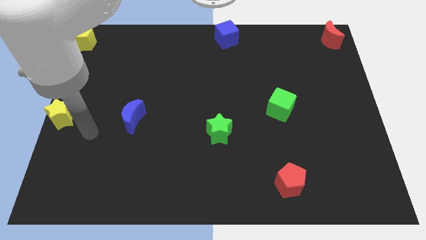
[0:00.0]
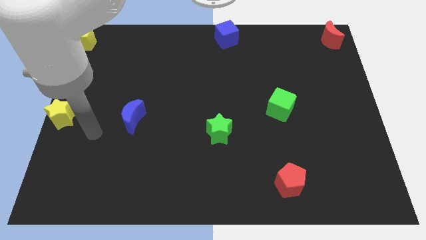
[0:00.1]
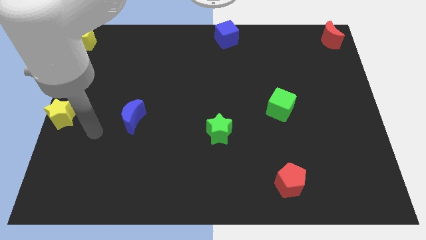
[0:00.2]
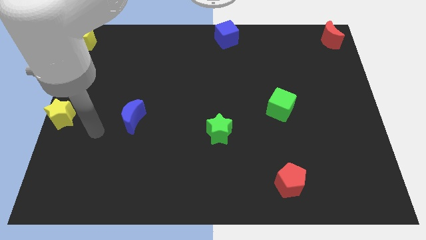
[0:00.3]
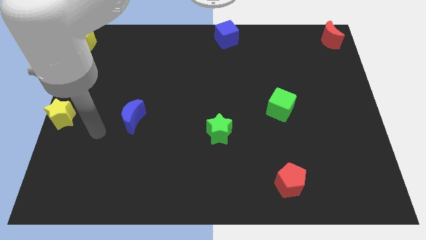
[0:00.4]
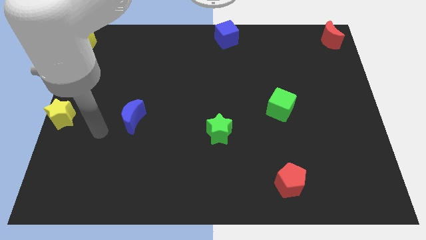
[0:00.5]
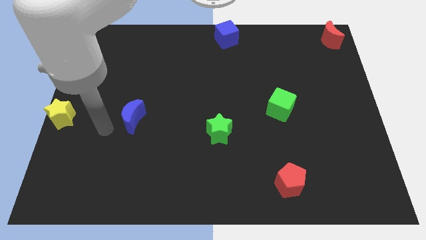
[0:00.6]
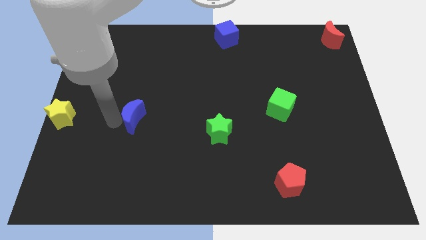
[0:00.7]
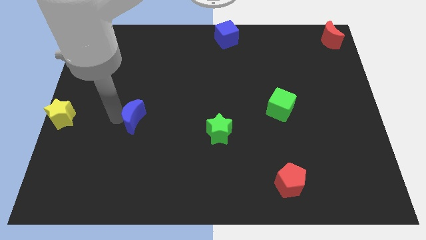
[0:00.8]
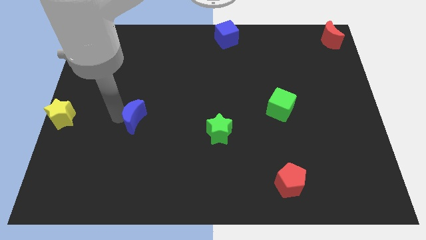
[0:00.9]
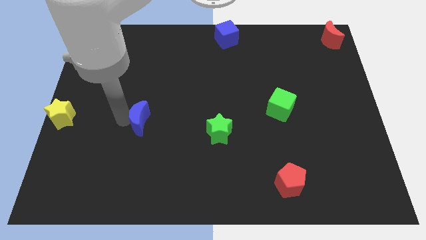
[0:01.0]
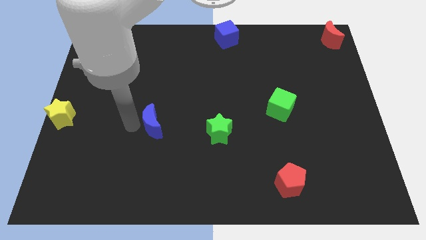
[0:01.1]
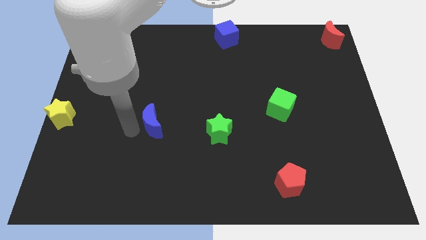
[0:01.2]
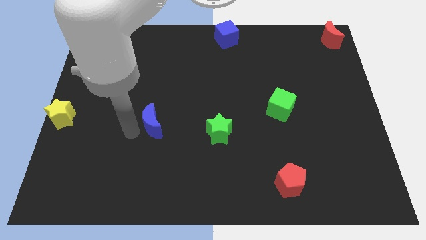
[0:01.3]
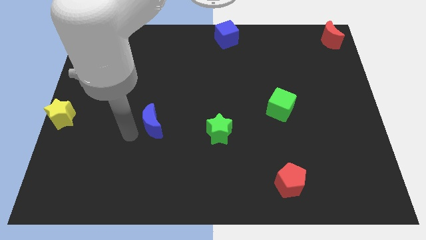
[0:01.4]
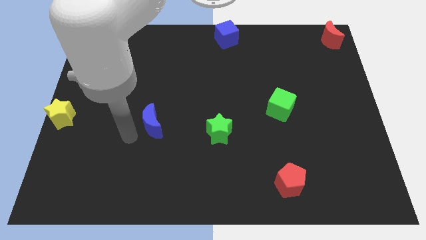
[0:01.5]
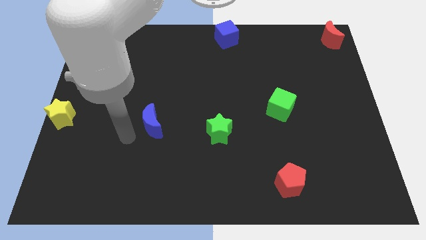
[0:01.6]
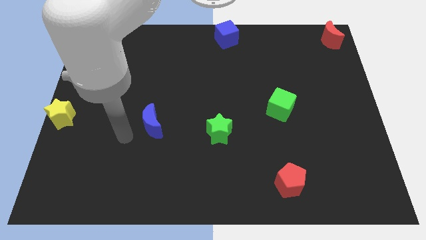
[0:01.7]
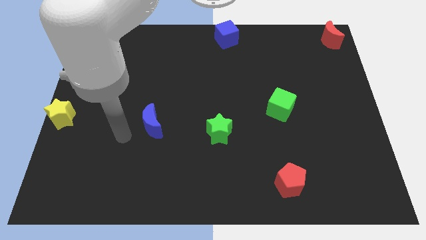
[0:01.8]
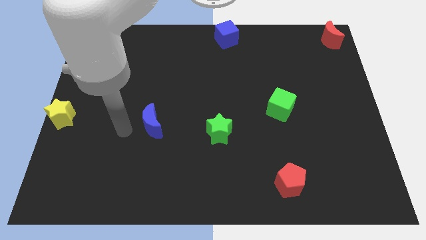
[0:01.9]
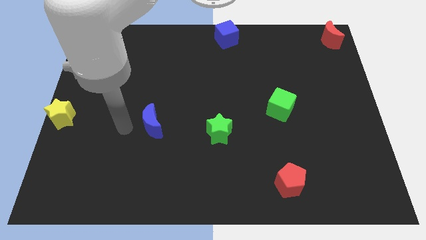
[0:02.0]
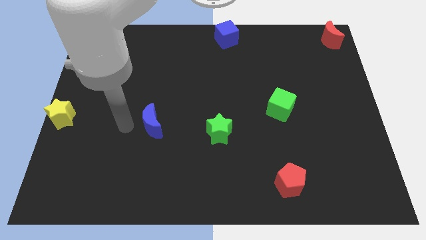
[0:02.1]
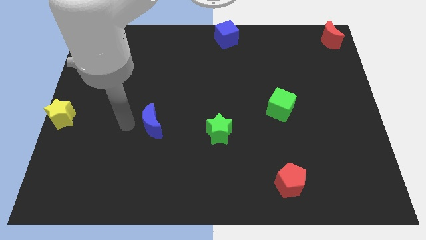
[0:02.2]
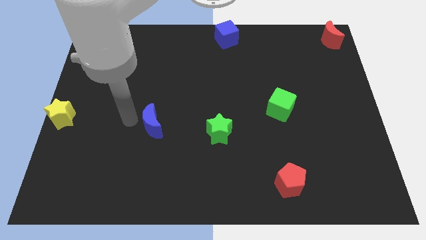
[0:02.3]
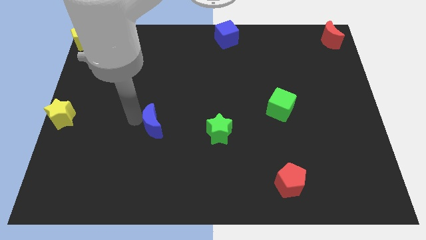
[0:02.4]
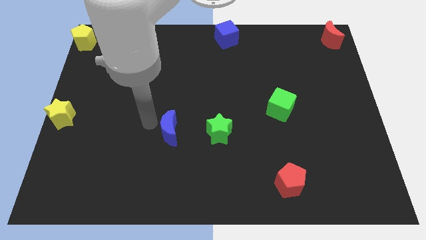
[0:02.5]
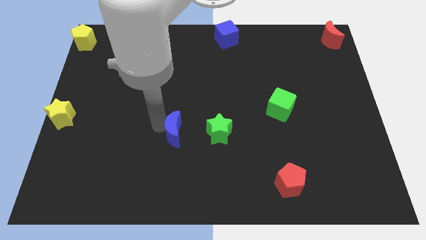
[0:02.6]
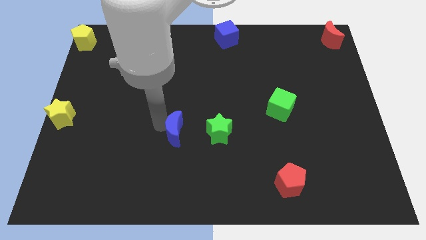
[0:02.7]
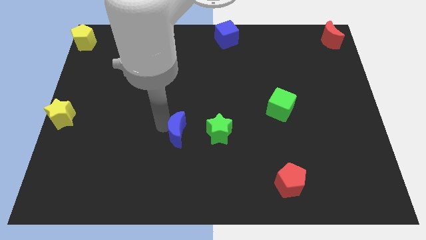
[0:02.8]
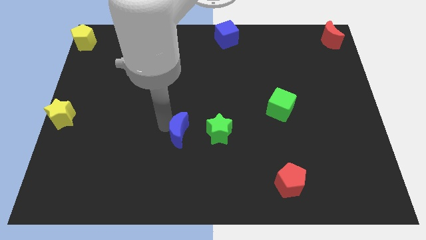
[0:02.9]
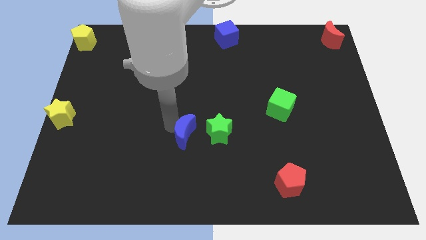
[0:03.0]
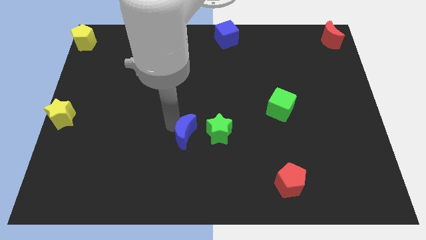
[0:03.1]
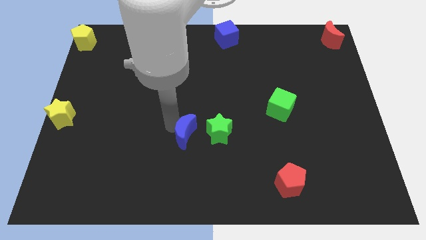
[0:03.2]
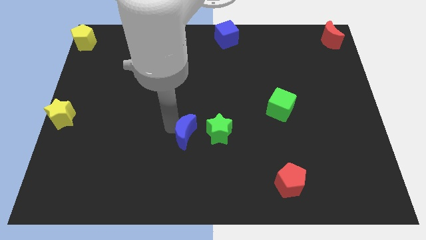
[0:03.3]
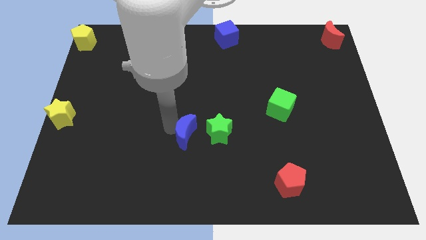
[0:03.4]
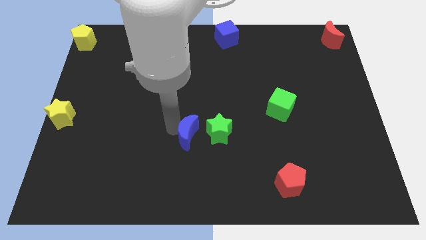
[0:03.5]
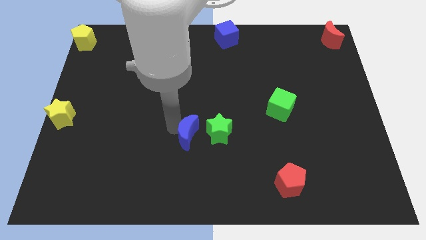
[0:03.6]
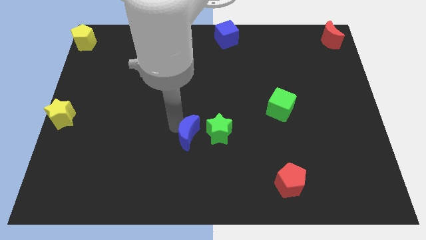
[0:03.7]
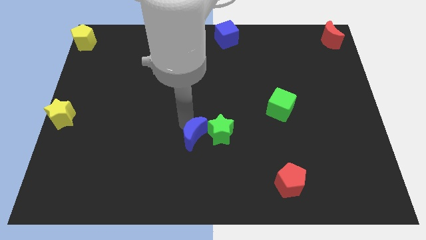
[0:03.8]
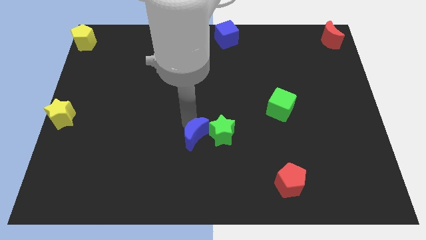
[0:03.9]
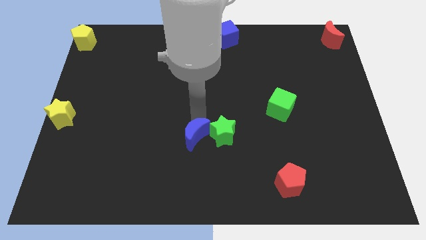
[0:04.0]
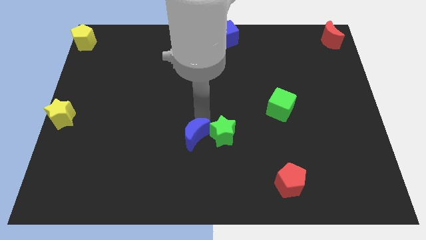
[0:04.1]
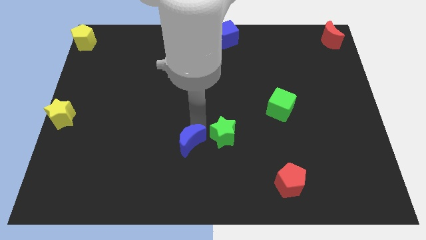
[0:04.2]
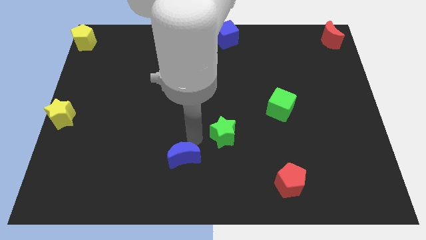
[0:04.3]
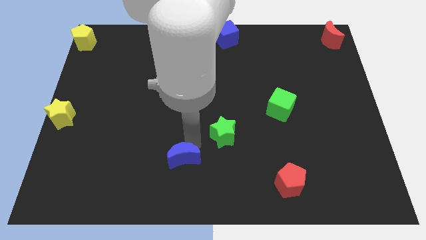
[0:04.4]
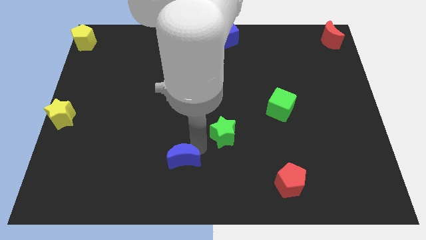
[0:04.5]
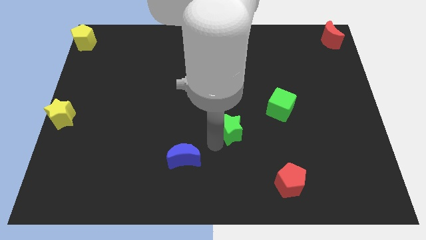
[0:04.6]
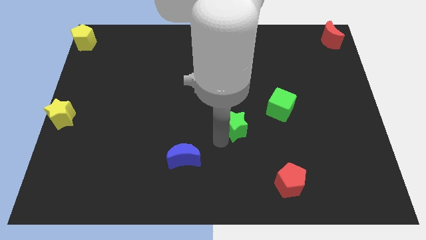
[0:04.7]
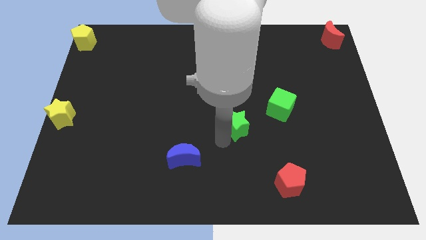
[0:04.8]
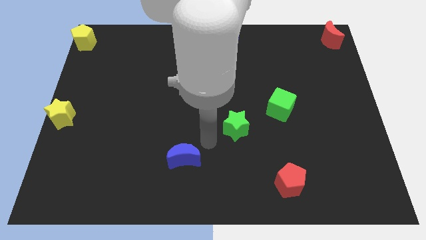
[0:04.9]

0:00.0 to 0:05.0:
move the blue moon diagonally top right to the green star

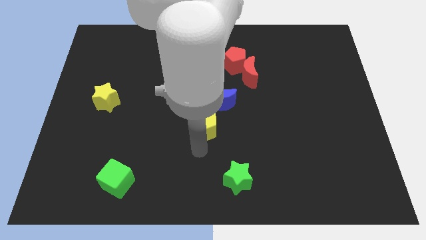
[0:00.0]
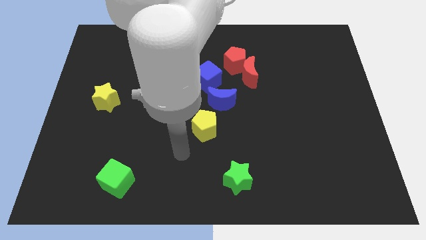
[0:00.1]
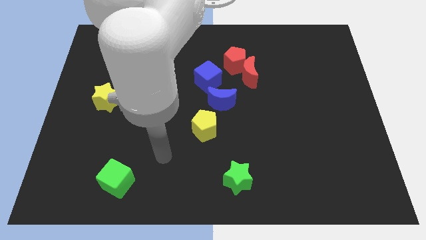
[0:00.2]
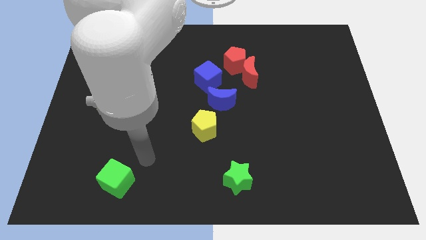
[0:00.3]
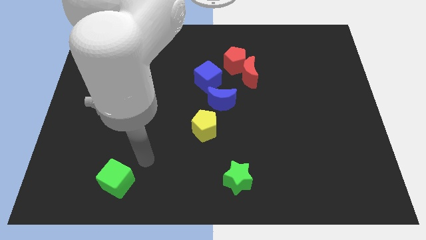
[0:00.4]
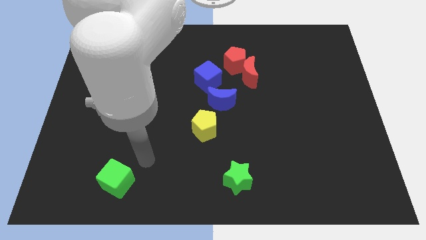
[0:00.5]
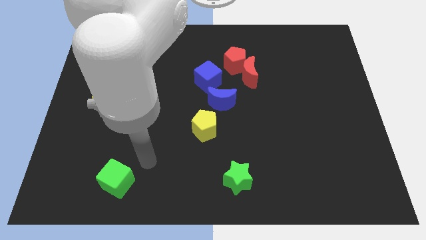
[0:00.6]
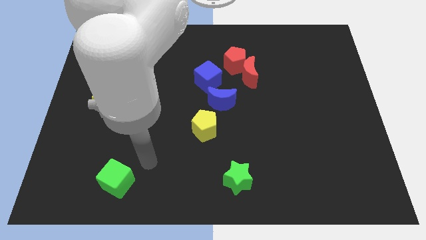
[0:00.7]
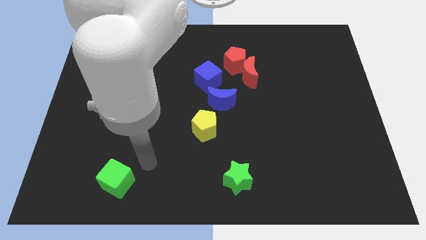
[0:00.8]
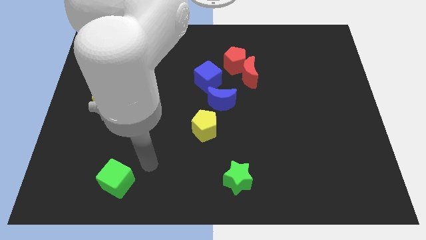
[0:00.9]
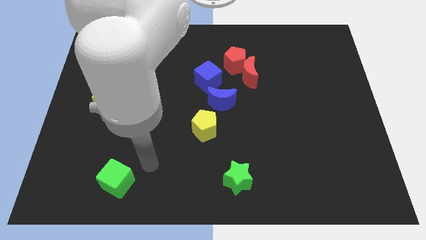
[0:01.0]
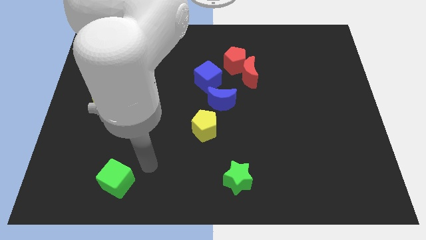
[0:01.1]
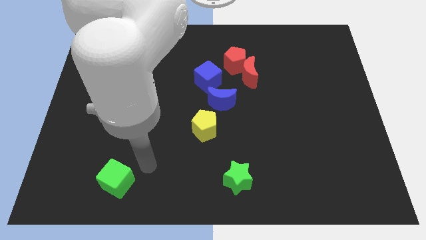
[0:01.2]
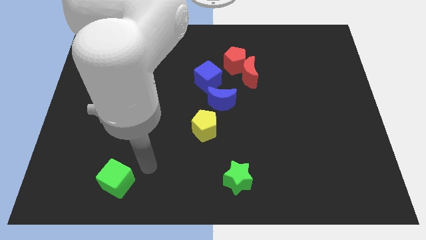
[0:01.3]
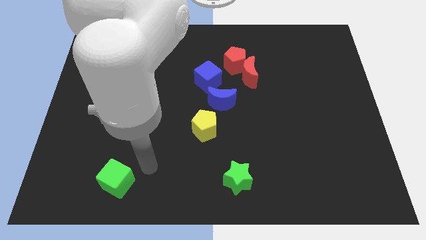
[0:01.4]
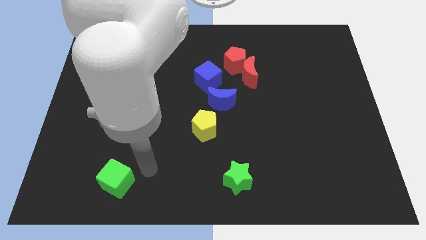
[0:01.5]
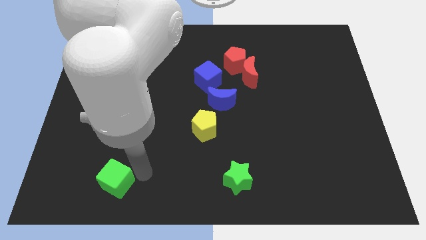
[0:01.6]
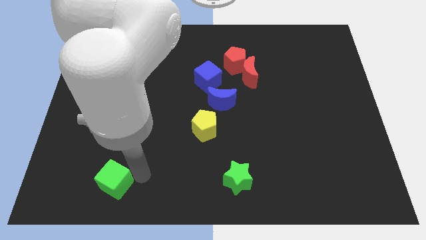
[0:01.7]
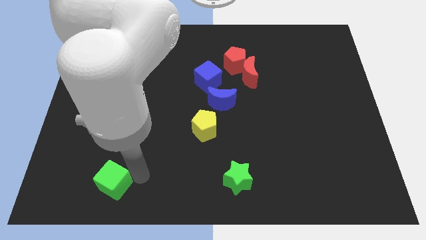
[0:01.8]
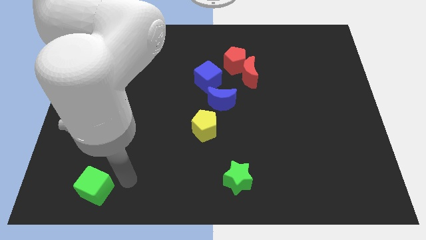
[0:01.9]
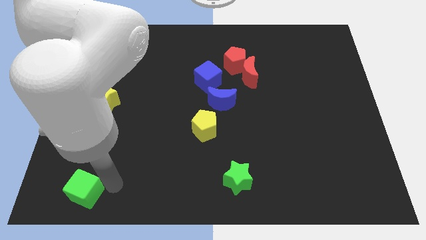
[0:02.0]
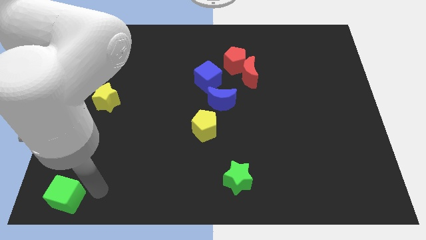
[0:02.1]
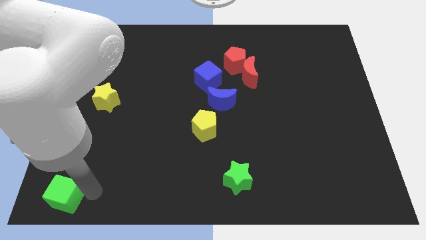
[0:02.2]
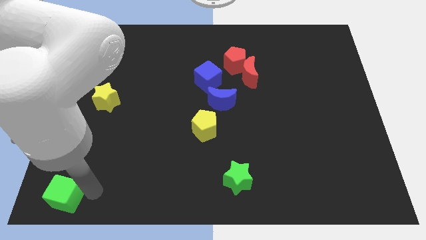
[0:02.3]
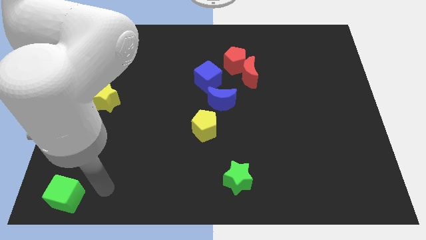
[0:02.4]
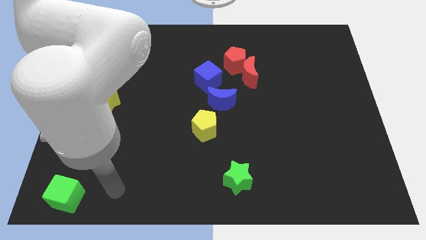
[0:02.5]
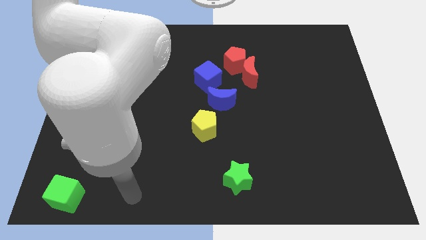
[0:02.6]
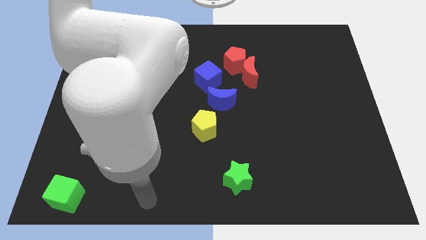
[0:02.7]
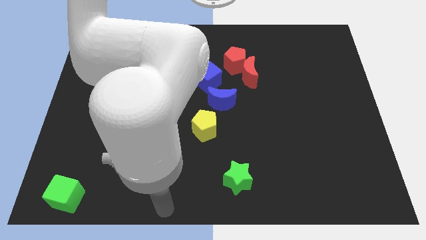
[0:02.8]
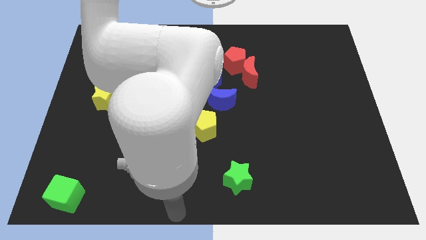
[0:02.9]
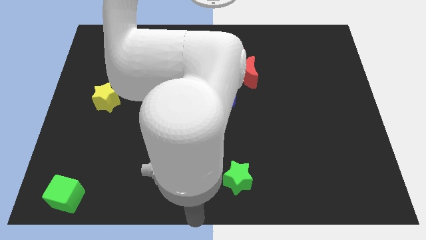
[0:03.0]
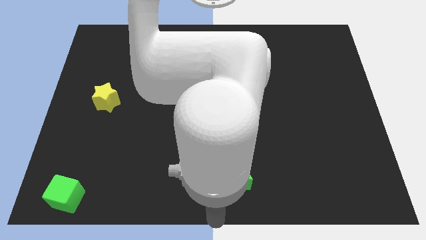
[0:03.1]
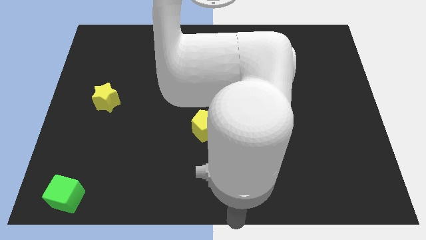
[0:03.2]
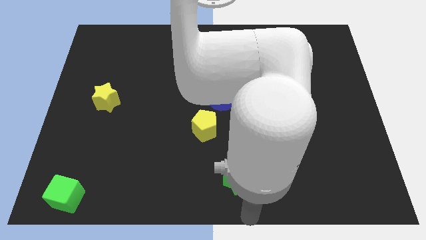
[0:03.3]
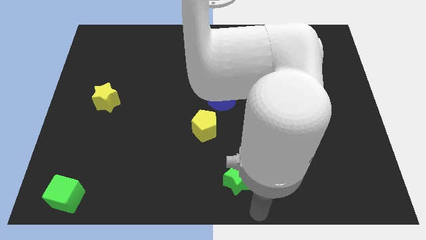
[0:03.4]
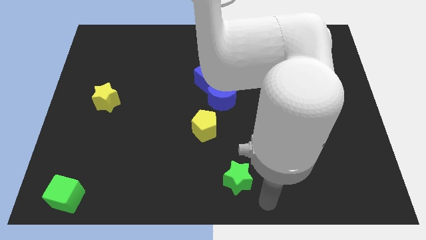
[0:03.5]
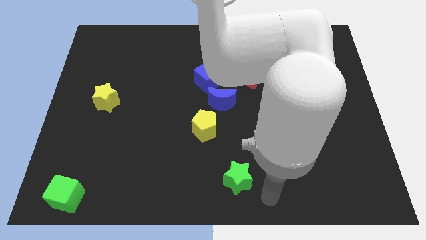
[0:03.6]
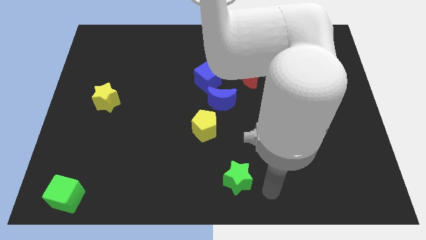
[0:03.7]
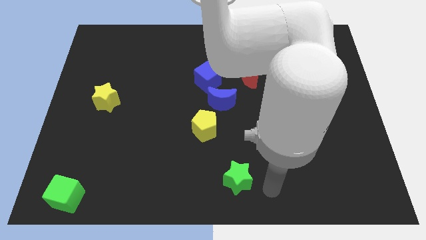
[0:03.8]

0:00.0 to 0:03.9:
push the green cube towards the bottom left side of the board
